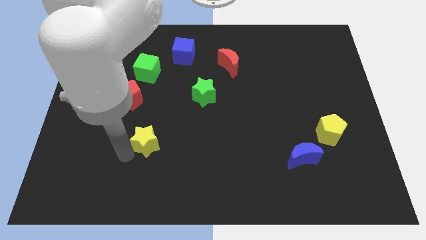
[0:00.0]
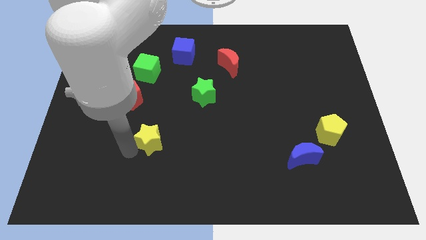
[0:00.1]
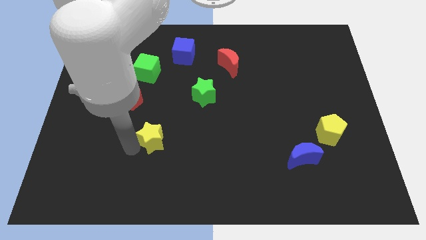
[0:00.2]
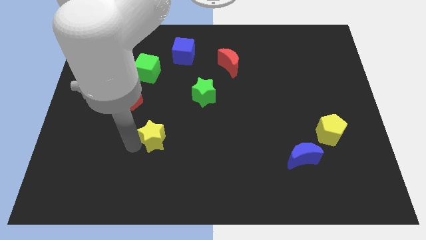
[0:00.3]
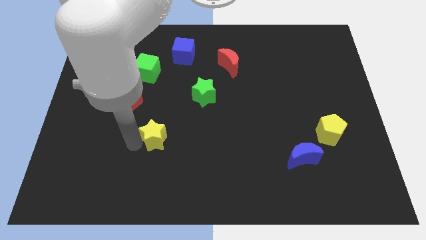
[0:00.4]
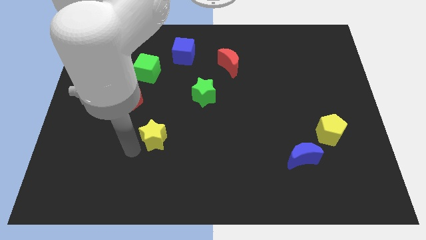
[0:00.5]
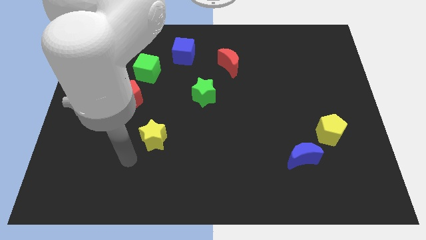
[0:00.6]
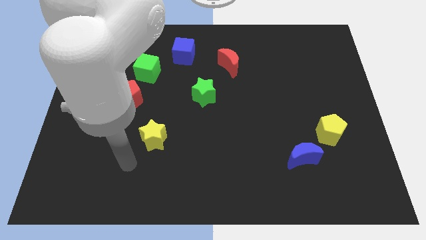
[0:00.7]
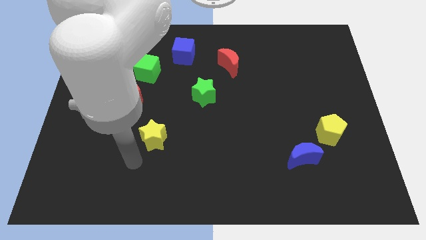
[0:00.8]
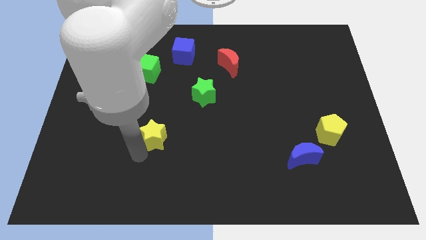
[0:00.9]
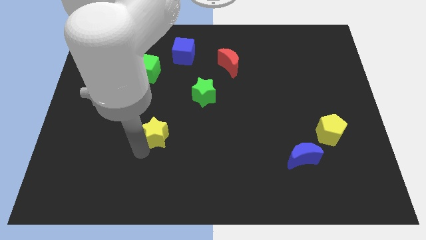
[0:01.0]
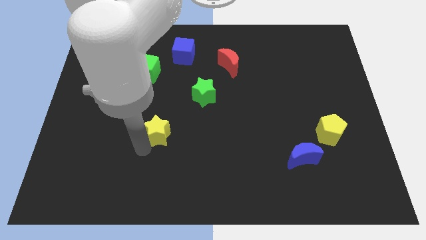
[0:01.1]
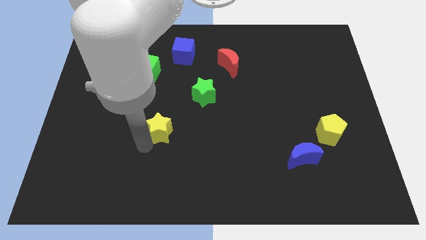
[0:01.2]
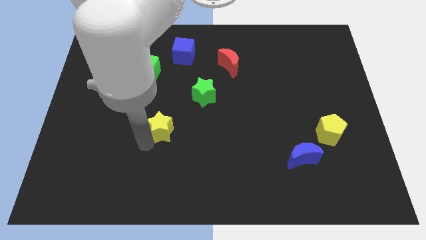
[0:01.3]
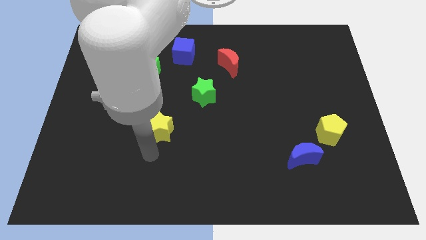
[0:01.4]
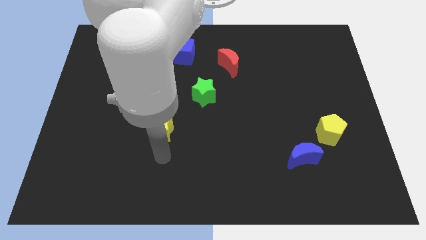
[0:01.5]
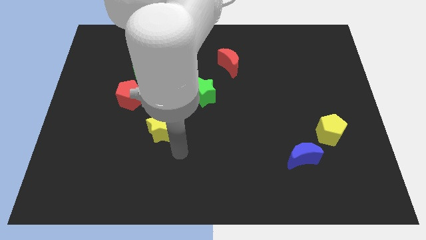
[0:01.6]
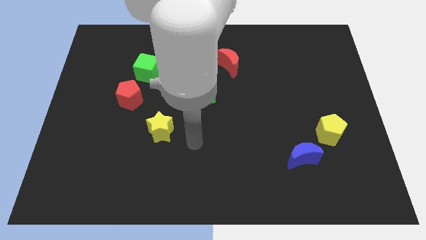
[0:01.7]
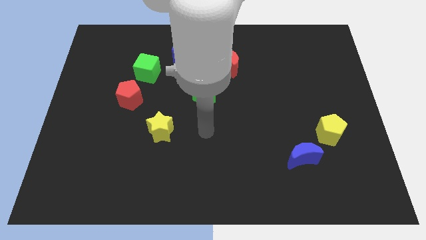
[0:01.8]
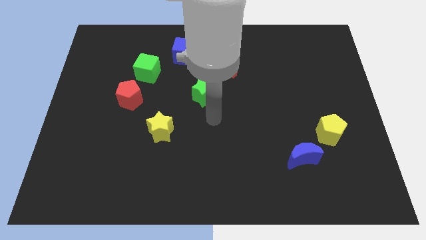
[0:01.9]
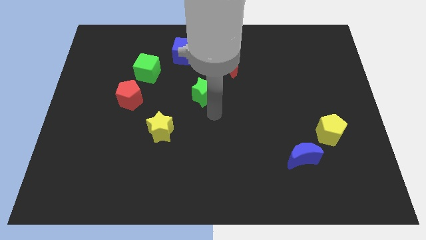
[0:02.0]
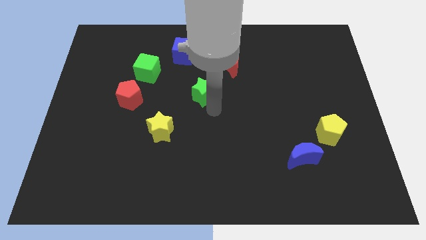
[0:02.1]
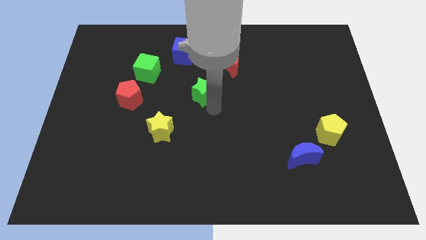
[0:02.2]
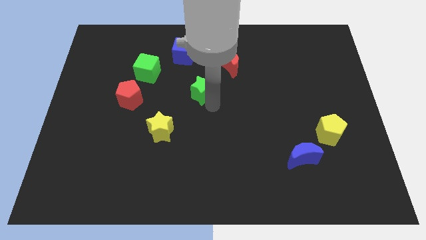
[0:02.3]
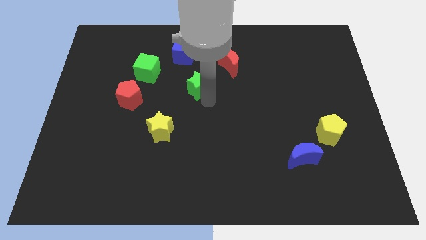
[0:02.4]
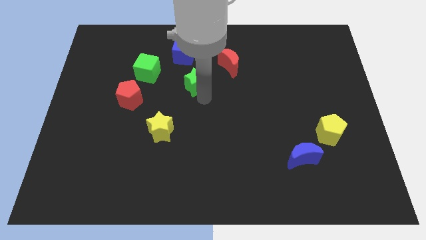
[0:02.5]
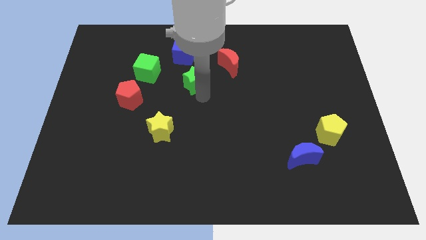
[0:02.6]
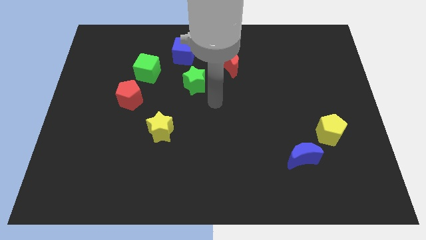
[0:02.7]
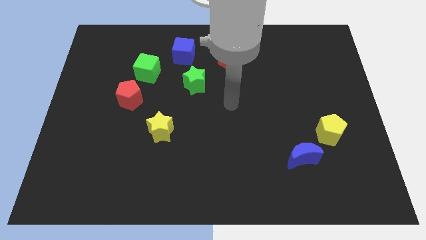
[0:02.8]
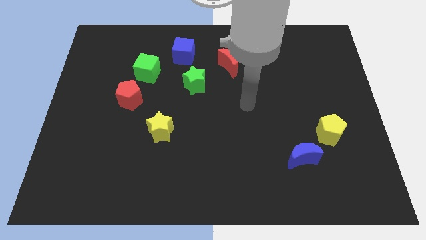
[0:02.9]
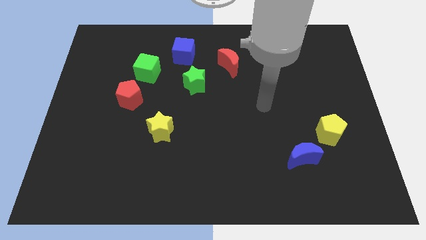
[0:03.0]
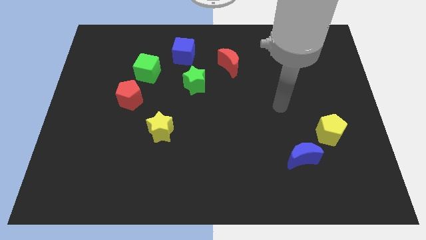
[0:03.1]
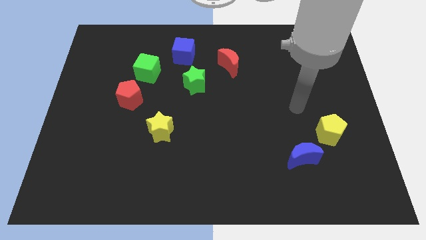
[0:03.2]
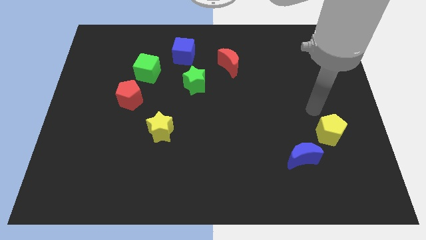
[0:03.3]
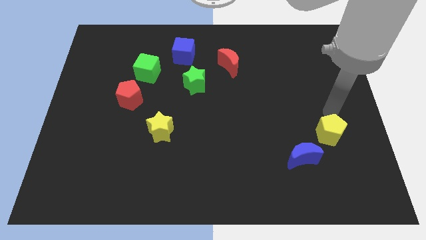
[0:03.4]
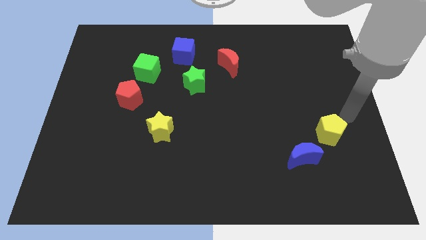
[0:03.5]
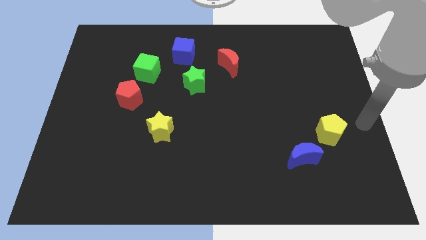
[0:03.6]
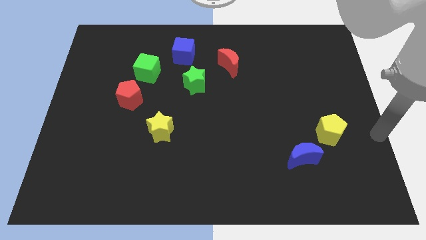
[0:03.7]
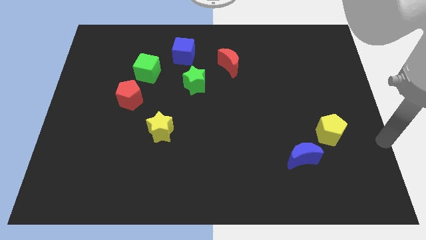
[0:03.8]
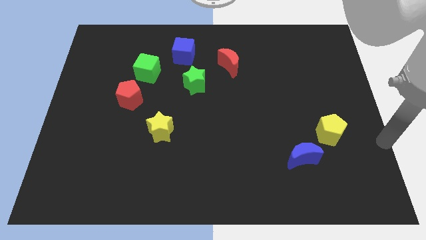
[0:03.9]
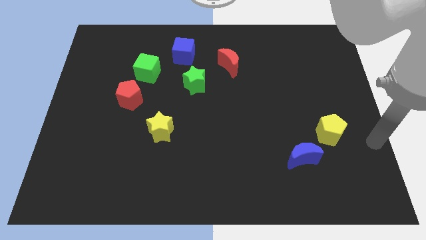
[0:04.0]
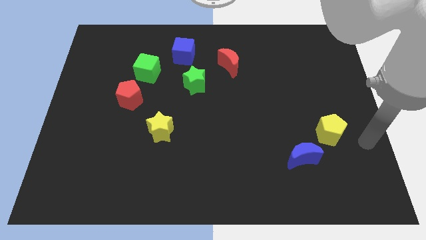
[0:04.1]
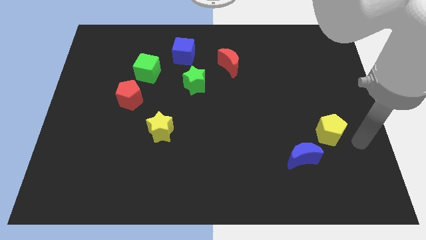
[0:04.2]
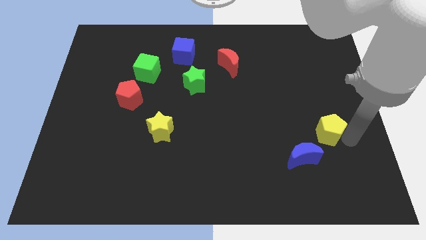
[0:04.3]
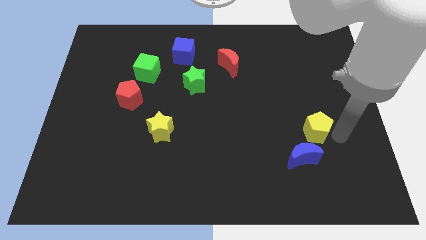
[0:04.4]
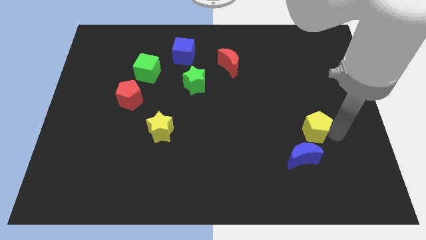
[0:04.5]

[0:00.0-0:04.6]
place the yellow star to the bottom right of the red pentagon

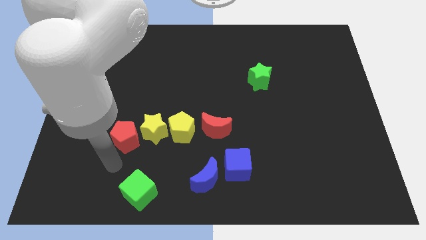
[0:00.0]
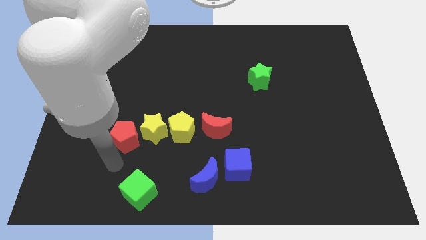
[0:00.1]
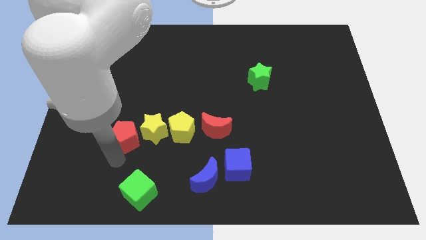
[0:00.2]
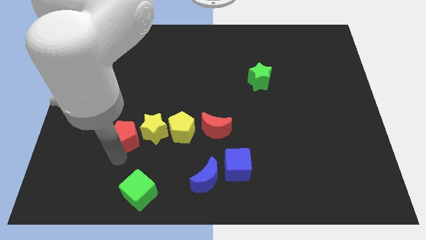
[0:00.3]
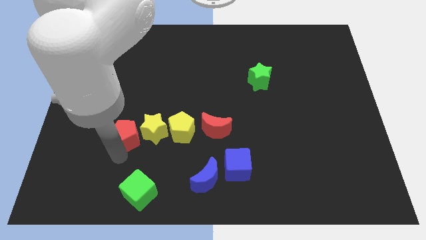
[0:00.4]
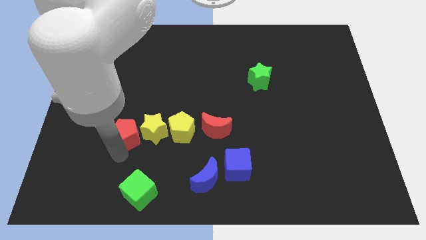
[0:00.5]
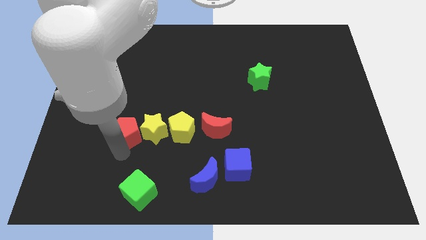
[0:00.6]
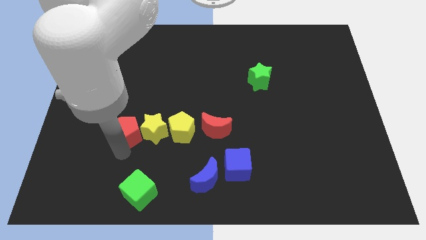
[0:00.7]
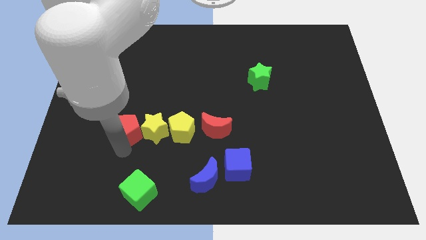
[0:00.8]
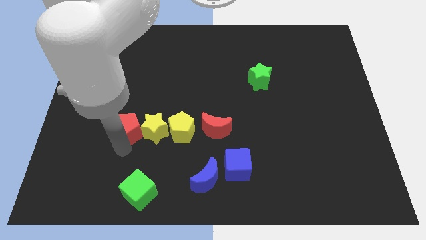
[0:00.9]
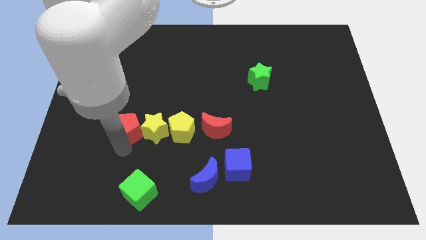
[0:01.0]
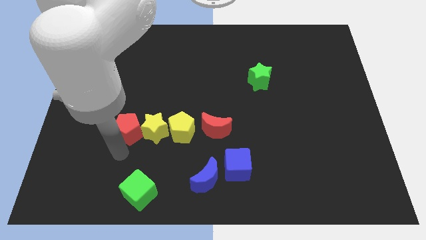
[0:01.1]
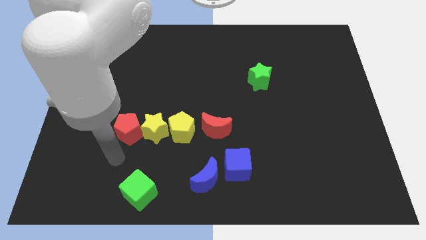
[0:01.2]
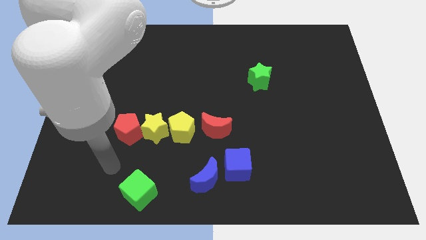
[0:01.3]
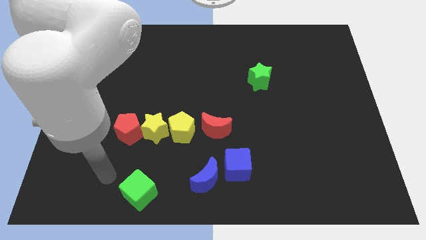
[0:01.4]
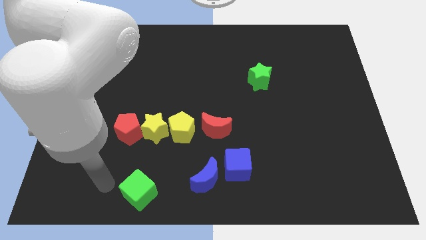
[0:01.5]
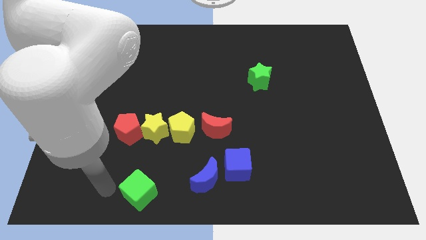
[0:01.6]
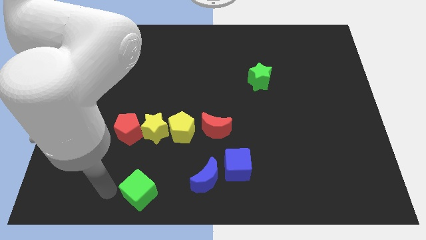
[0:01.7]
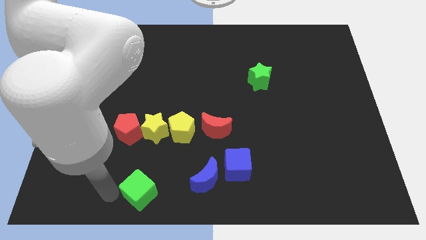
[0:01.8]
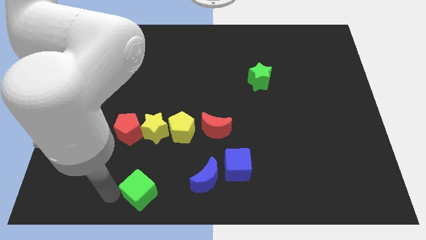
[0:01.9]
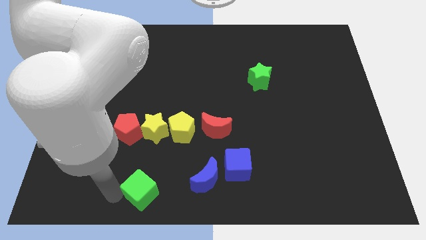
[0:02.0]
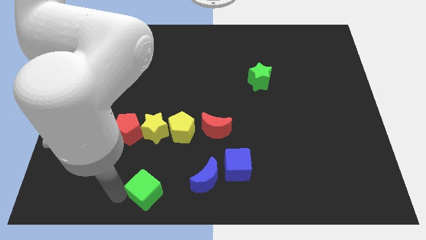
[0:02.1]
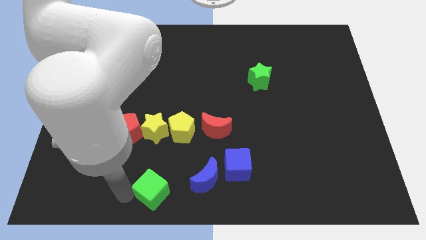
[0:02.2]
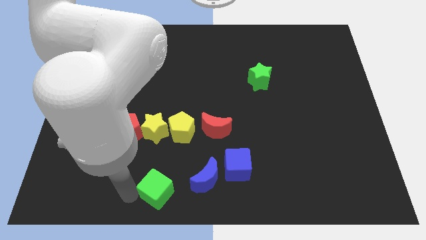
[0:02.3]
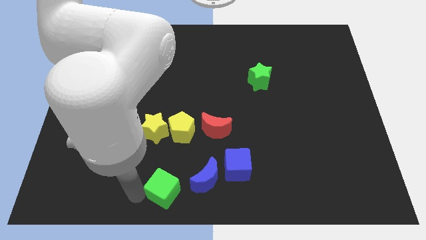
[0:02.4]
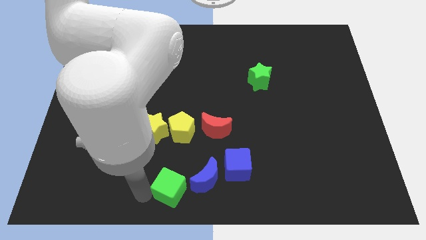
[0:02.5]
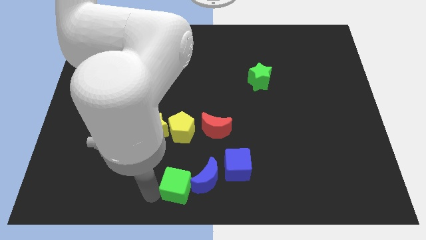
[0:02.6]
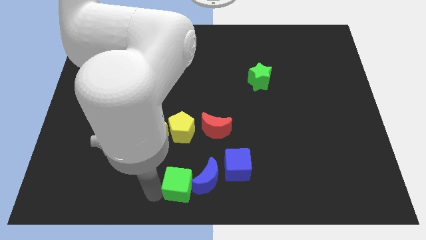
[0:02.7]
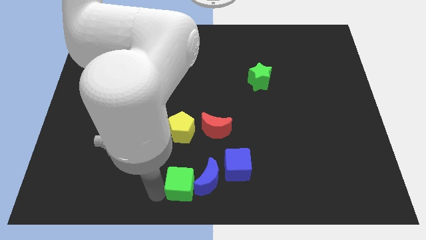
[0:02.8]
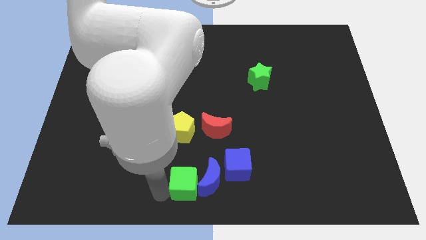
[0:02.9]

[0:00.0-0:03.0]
move green cube left beside blue moon

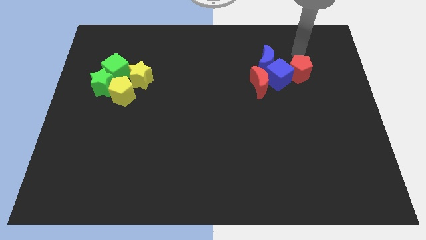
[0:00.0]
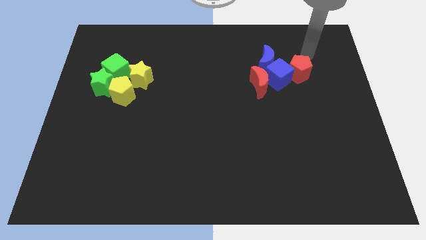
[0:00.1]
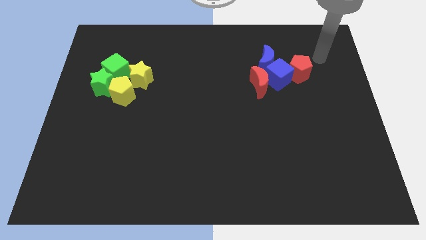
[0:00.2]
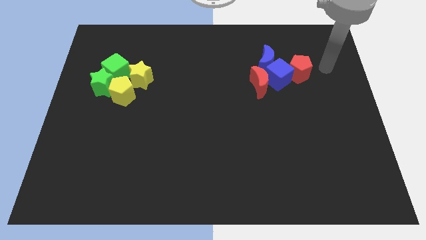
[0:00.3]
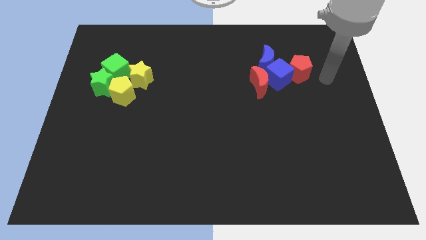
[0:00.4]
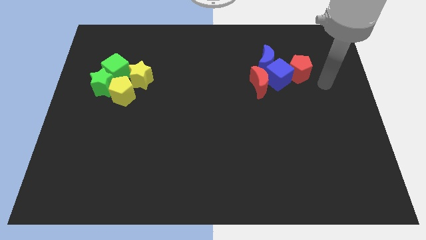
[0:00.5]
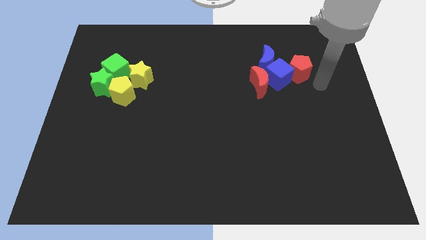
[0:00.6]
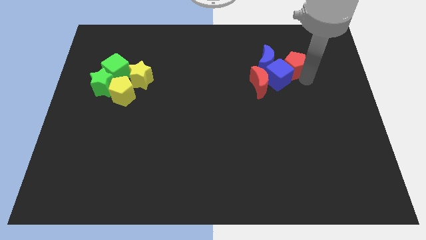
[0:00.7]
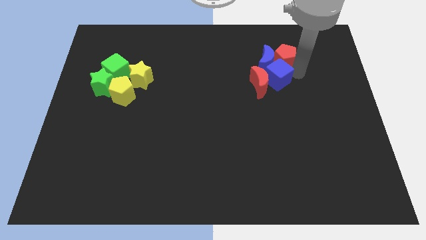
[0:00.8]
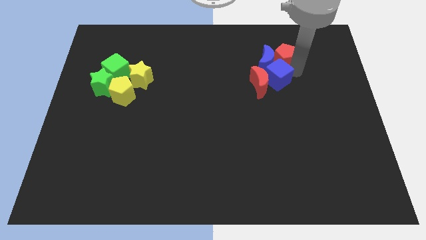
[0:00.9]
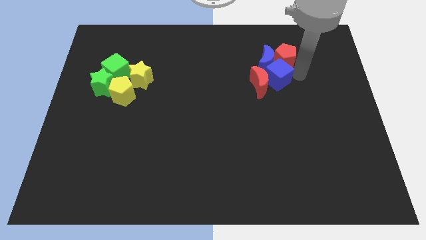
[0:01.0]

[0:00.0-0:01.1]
place red pentagon at the top of the blue cube

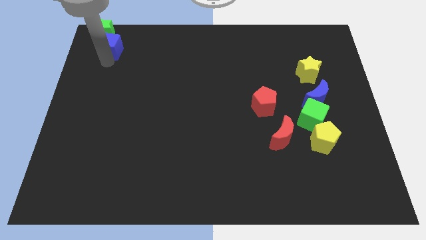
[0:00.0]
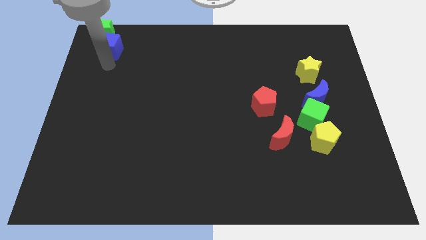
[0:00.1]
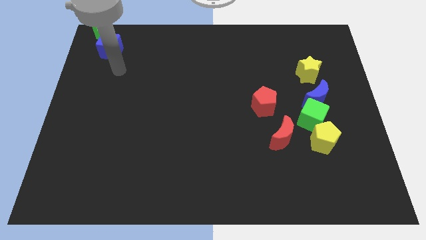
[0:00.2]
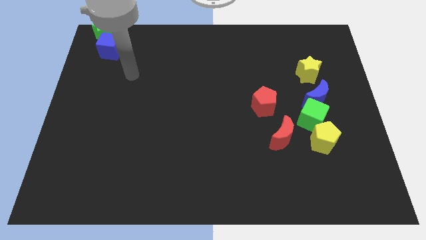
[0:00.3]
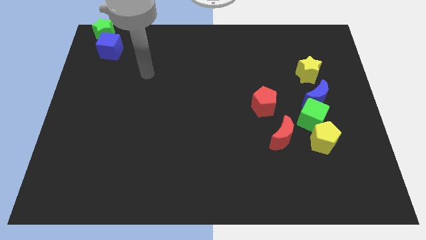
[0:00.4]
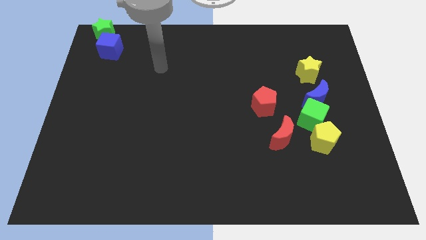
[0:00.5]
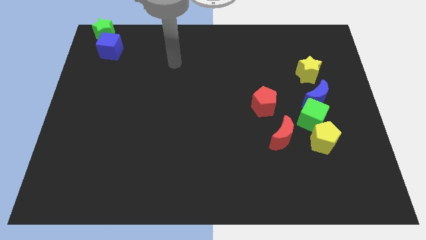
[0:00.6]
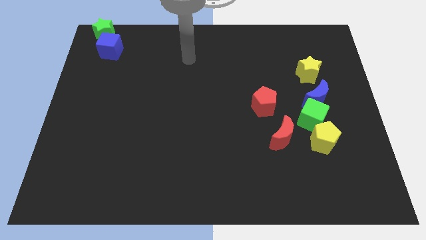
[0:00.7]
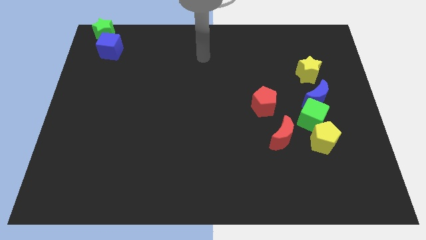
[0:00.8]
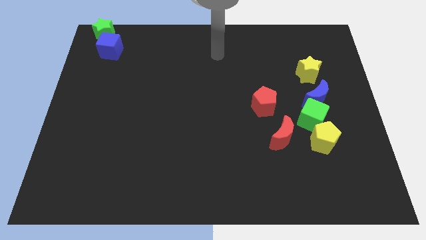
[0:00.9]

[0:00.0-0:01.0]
move arm at center top
